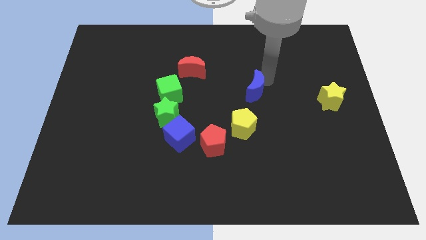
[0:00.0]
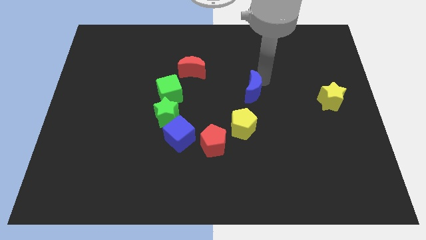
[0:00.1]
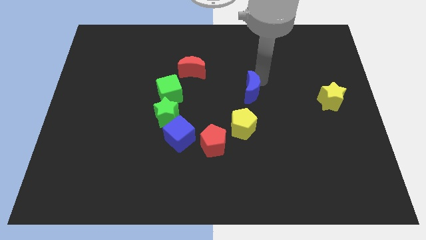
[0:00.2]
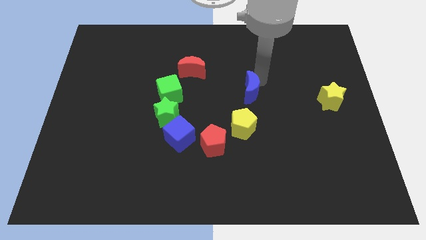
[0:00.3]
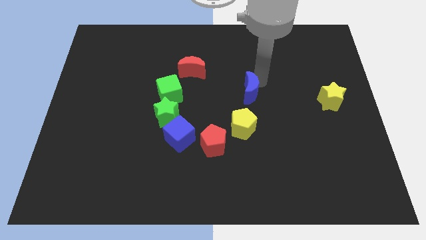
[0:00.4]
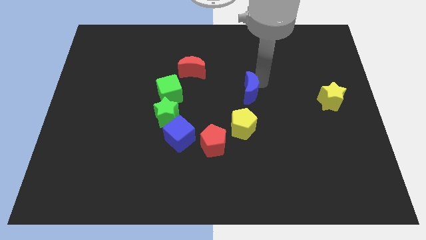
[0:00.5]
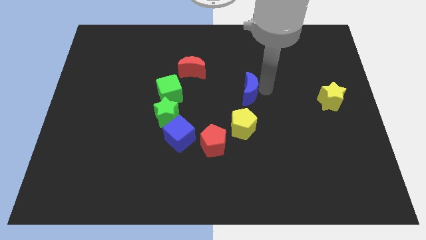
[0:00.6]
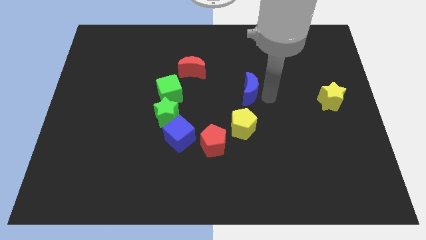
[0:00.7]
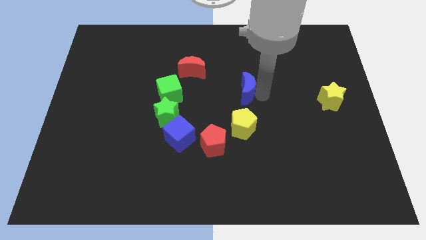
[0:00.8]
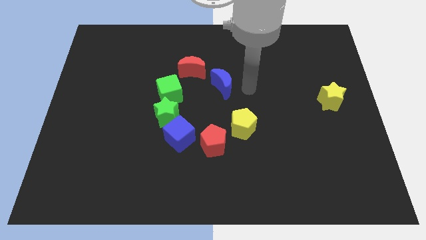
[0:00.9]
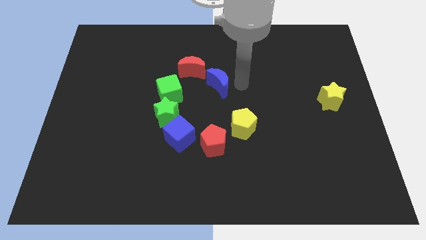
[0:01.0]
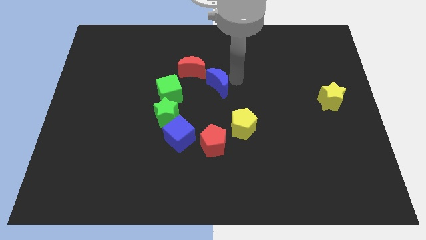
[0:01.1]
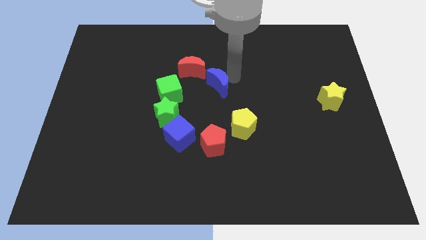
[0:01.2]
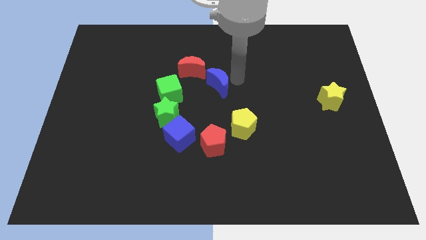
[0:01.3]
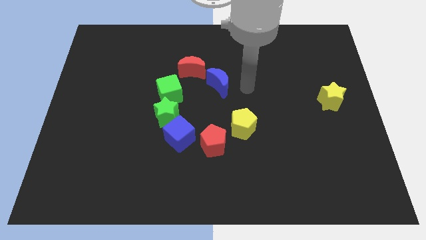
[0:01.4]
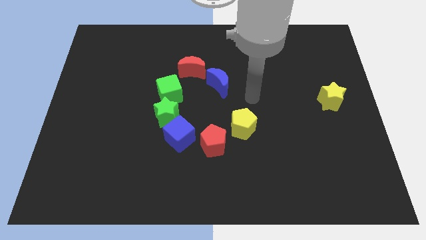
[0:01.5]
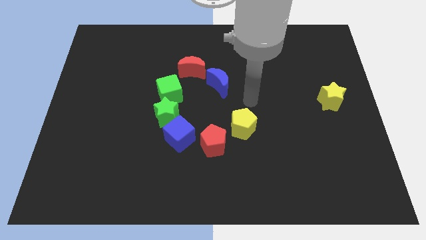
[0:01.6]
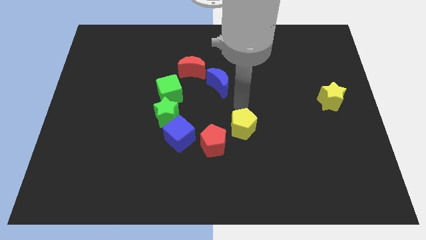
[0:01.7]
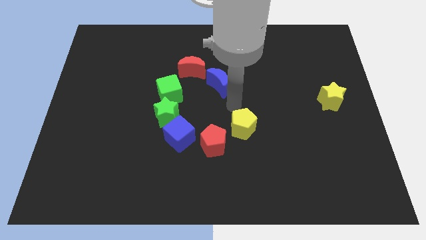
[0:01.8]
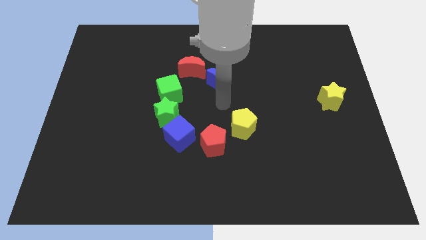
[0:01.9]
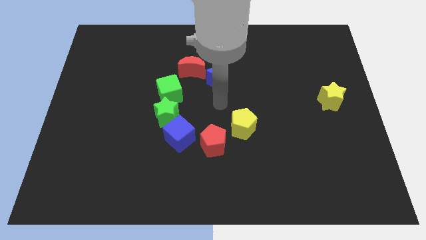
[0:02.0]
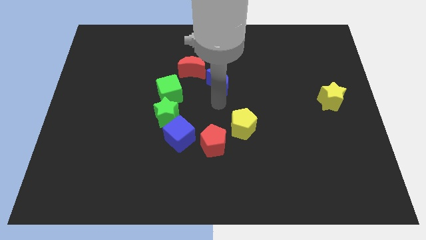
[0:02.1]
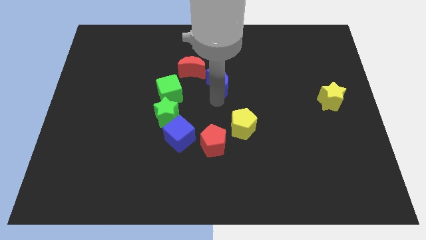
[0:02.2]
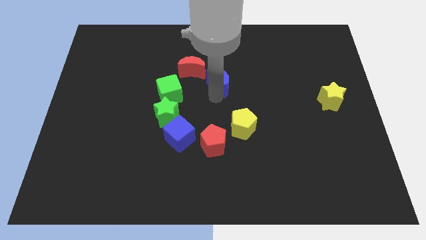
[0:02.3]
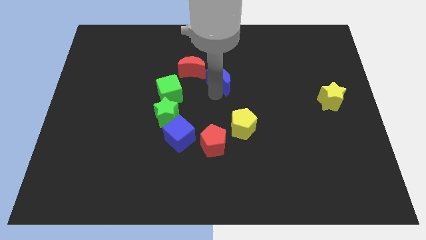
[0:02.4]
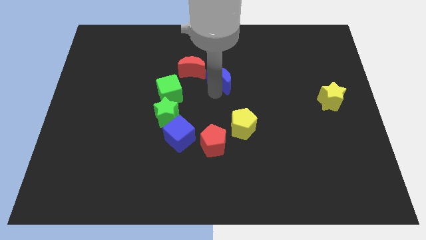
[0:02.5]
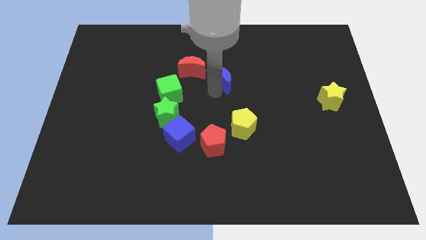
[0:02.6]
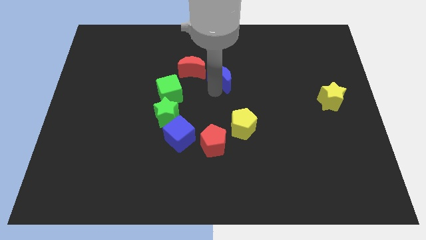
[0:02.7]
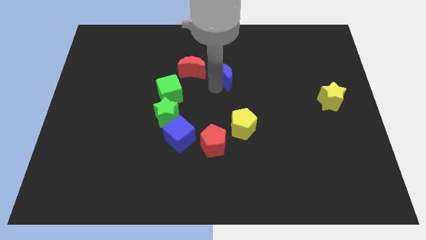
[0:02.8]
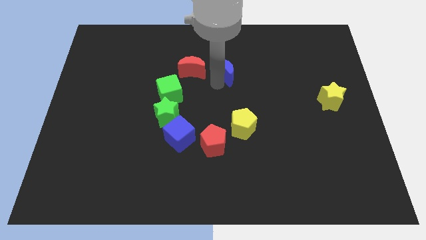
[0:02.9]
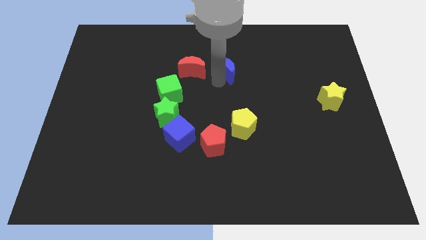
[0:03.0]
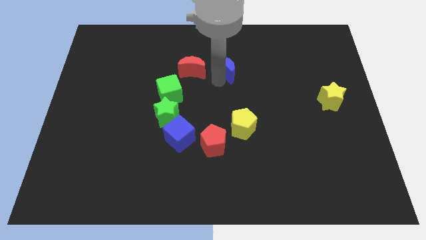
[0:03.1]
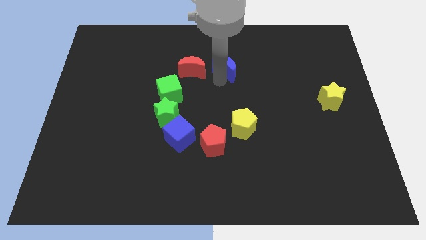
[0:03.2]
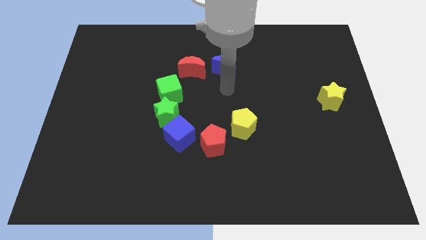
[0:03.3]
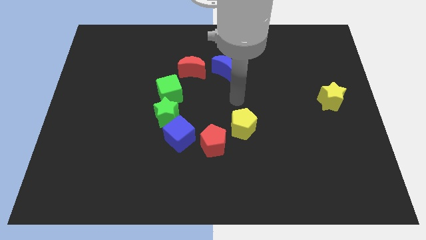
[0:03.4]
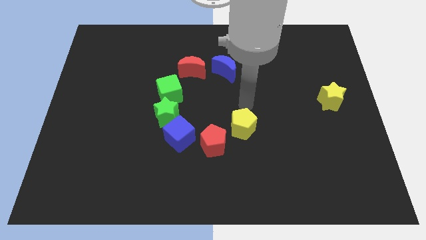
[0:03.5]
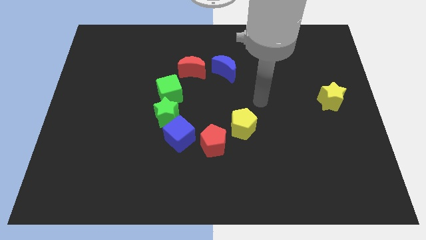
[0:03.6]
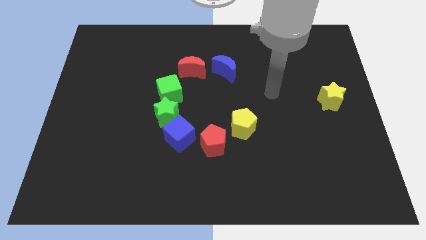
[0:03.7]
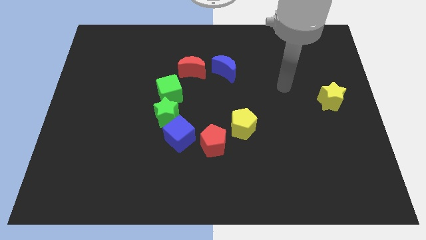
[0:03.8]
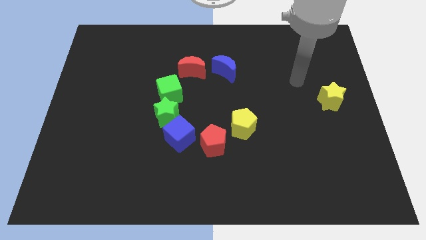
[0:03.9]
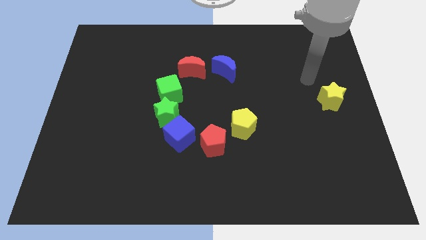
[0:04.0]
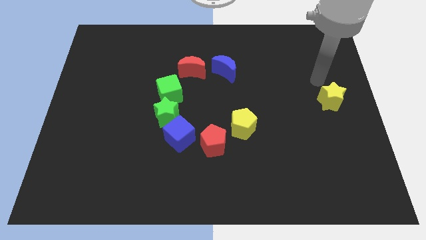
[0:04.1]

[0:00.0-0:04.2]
move blue moon parallel right to red moon

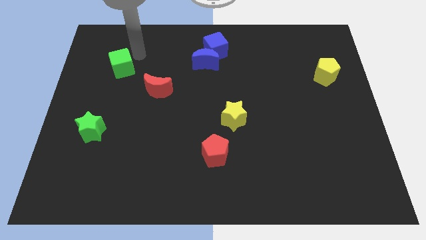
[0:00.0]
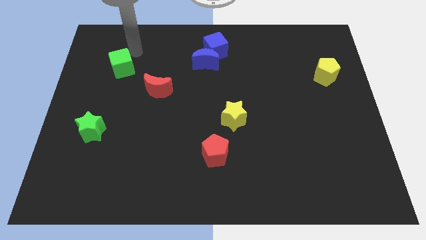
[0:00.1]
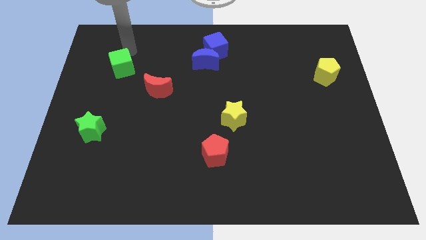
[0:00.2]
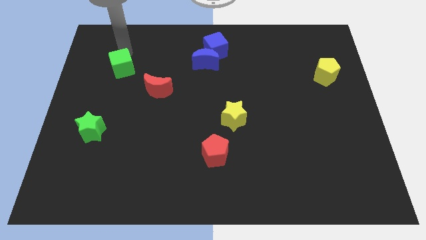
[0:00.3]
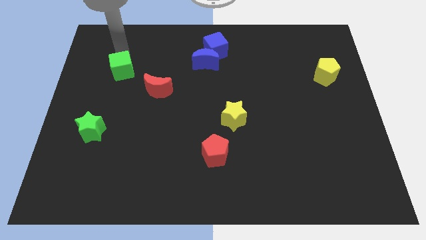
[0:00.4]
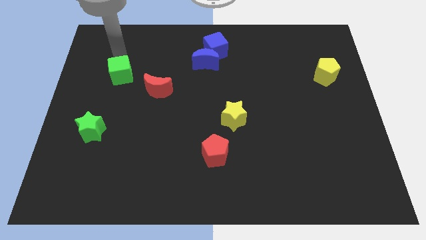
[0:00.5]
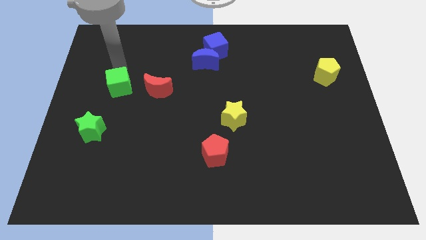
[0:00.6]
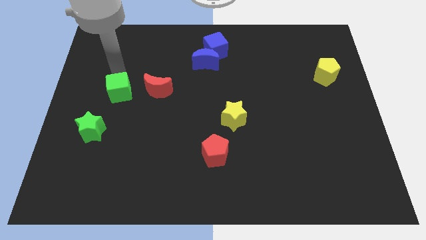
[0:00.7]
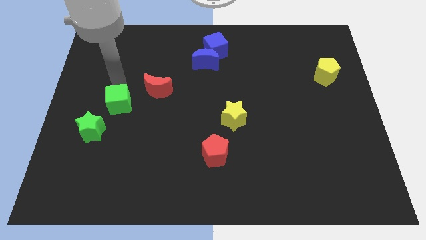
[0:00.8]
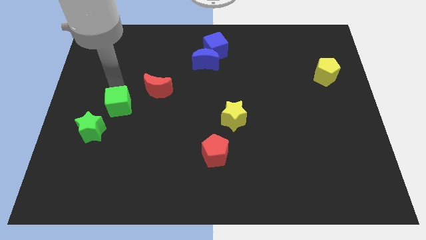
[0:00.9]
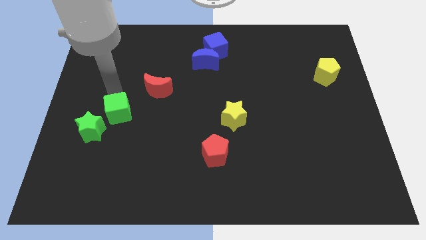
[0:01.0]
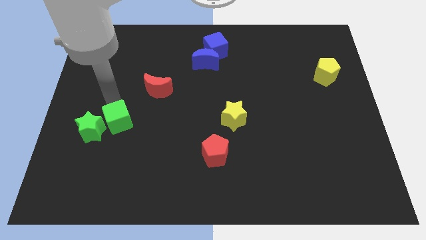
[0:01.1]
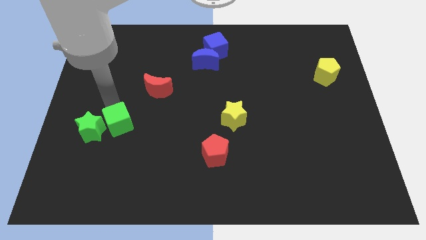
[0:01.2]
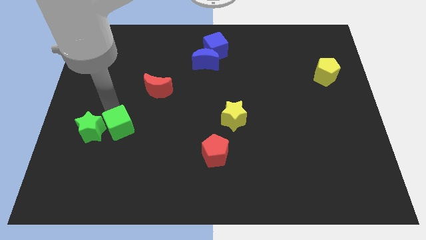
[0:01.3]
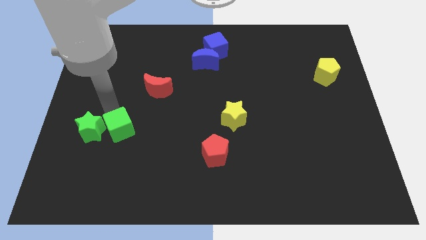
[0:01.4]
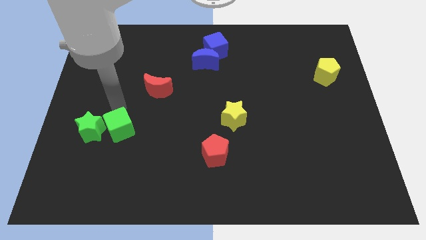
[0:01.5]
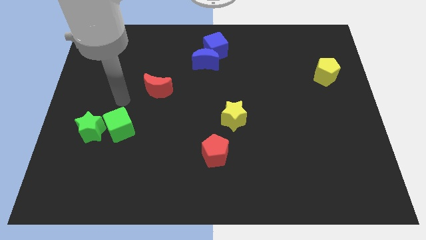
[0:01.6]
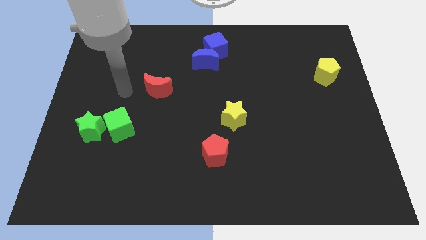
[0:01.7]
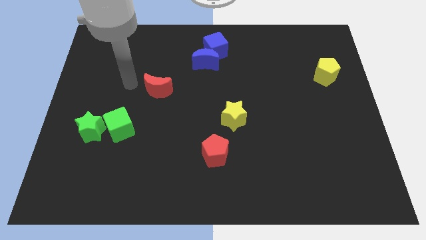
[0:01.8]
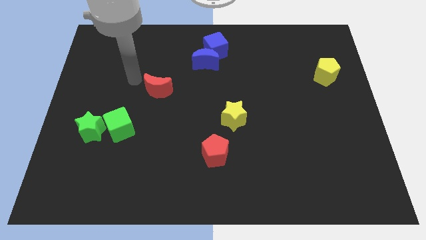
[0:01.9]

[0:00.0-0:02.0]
slide the green cube towards the bottom side

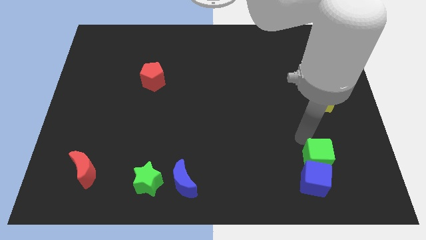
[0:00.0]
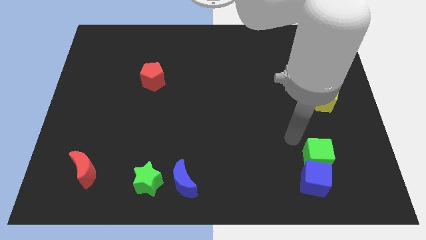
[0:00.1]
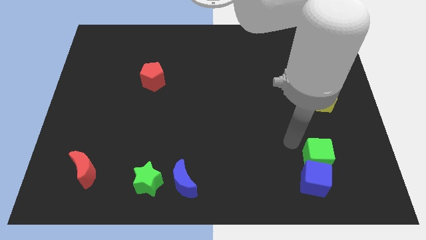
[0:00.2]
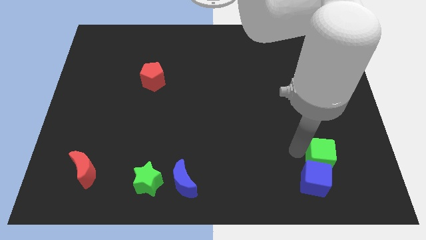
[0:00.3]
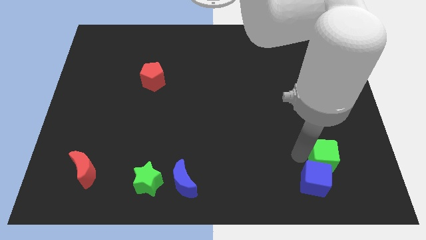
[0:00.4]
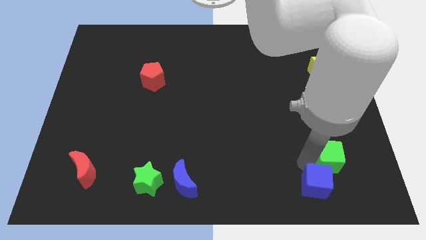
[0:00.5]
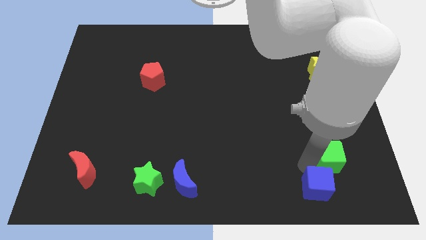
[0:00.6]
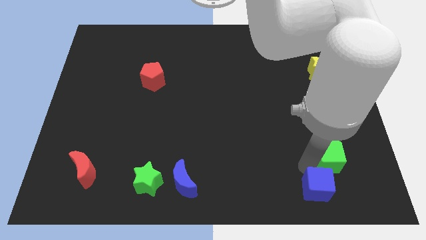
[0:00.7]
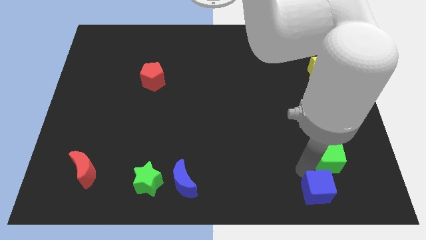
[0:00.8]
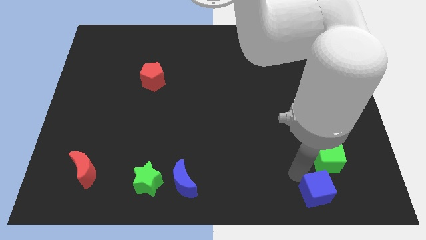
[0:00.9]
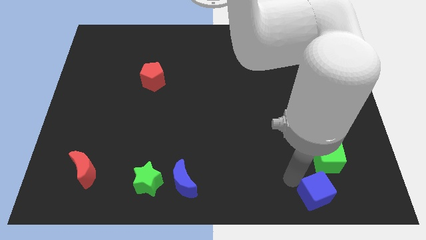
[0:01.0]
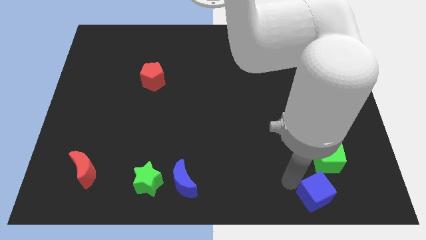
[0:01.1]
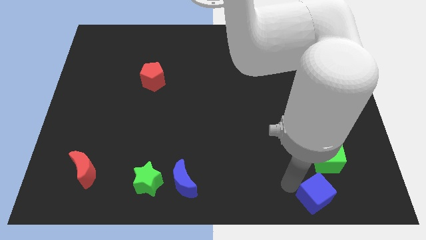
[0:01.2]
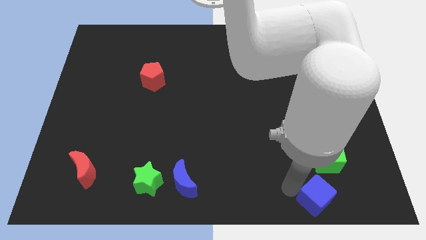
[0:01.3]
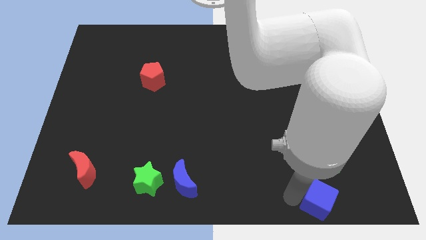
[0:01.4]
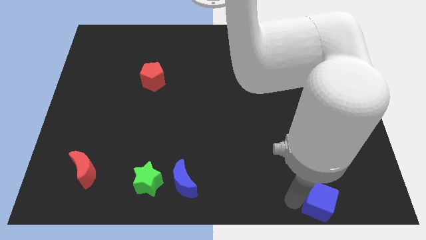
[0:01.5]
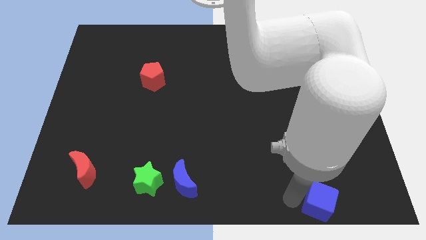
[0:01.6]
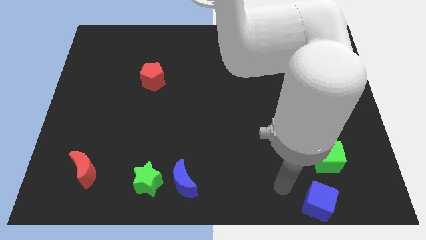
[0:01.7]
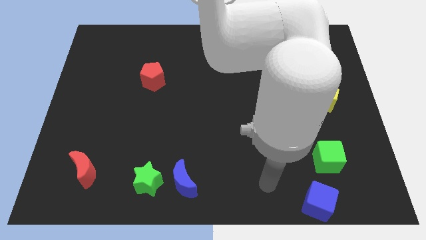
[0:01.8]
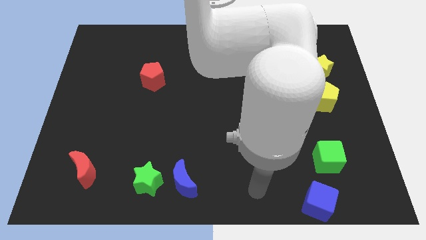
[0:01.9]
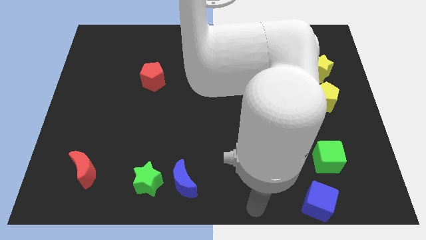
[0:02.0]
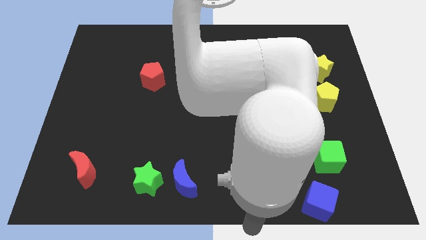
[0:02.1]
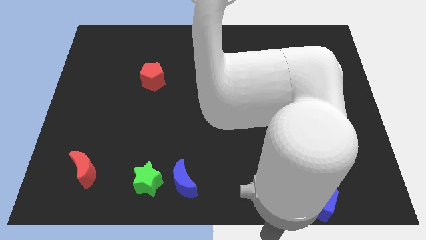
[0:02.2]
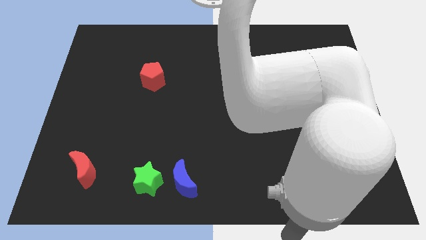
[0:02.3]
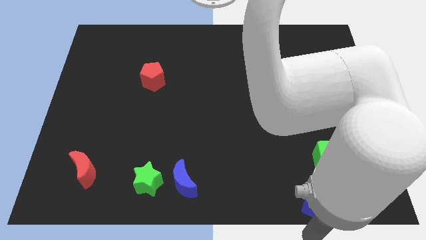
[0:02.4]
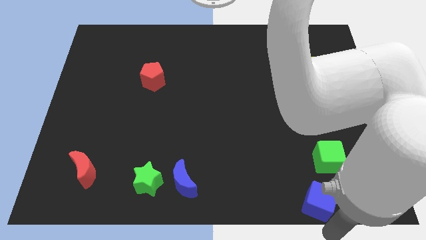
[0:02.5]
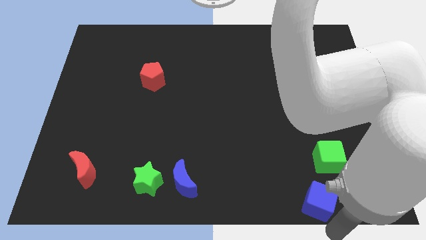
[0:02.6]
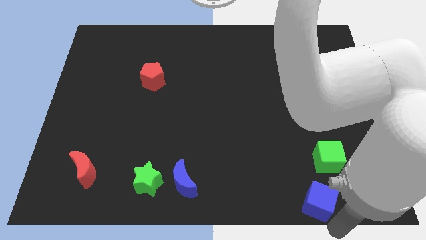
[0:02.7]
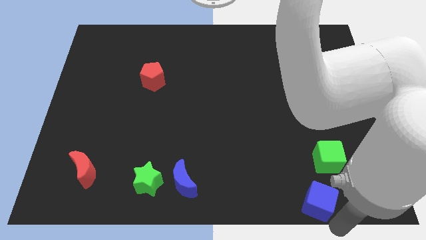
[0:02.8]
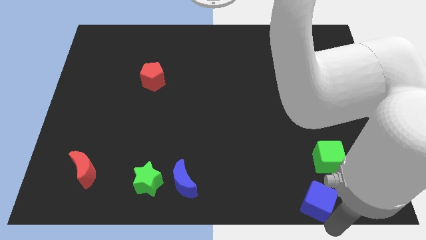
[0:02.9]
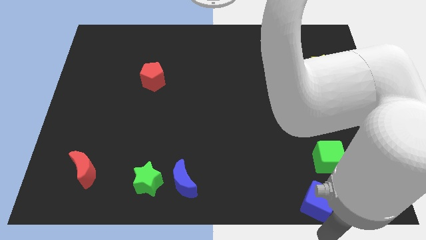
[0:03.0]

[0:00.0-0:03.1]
separate the blue cube from green cube
